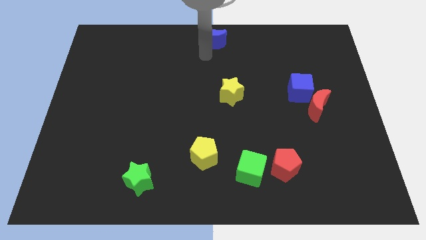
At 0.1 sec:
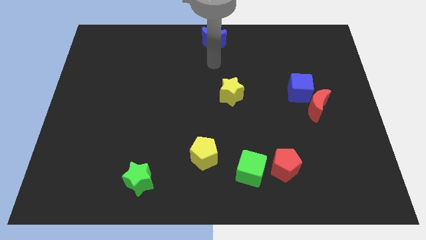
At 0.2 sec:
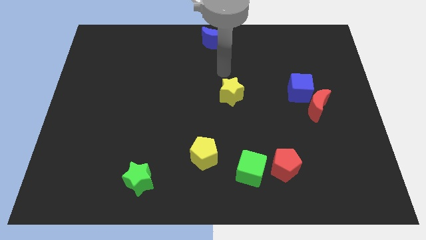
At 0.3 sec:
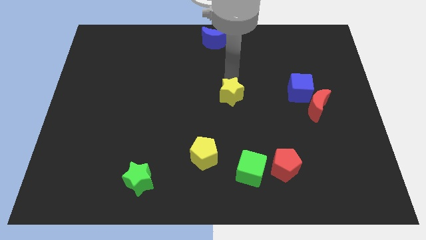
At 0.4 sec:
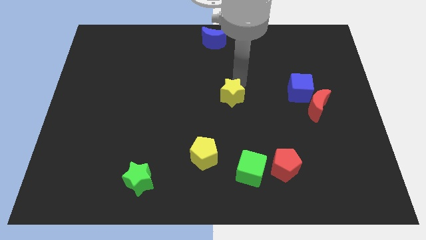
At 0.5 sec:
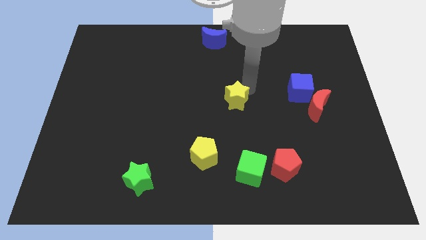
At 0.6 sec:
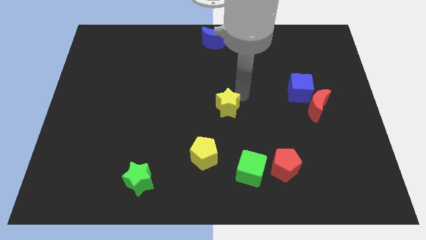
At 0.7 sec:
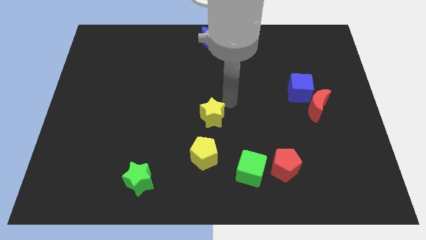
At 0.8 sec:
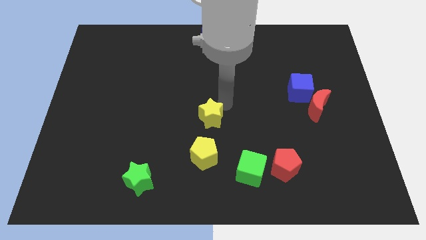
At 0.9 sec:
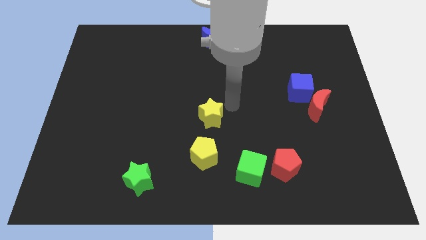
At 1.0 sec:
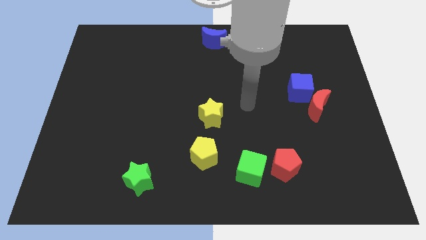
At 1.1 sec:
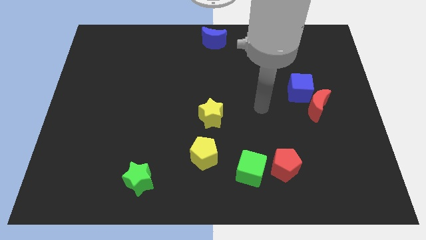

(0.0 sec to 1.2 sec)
place the yellow star above the yellow pentagon

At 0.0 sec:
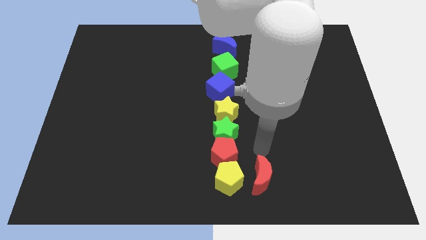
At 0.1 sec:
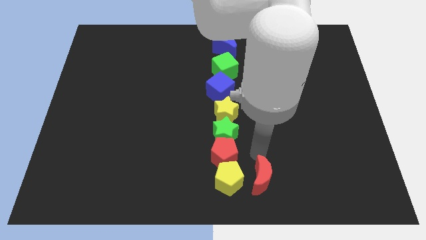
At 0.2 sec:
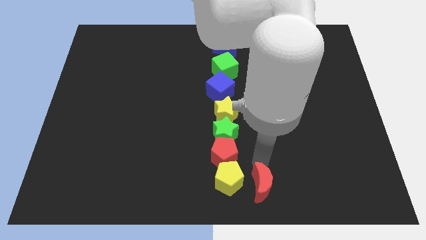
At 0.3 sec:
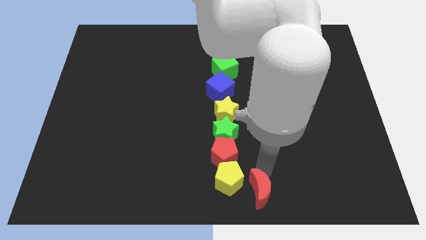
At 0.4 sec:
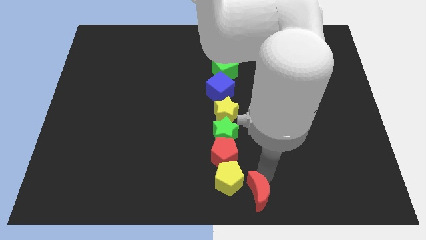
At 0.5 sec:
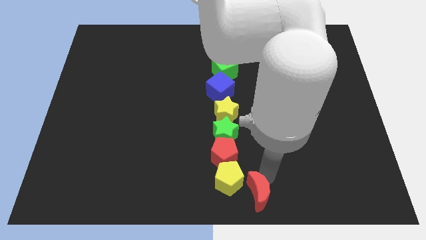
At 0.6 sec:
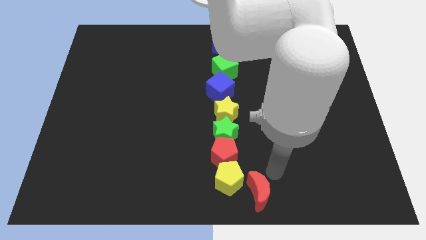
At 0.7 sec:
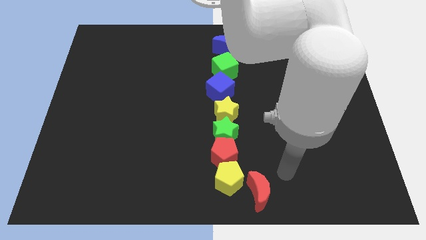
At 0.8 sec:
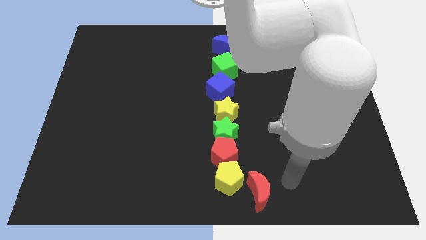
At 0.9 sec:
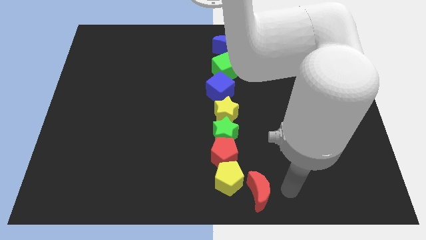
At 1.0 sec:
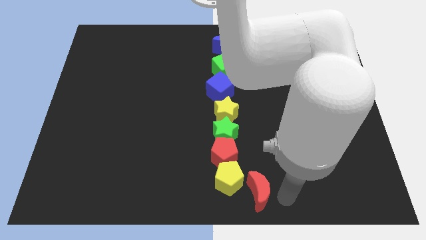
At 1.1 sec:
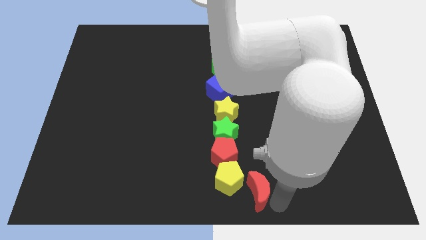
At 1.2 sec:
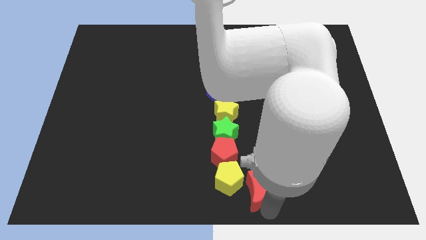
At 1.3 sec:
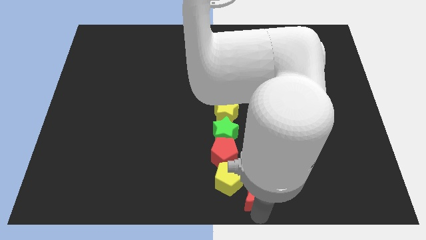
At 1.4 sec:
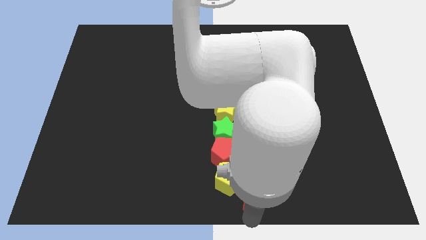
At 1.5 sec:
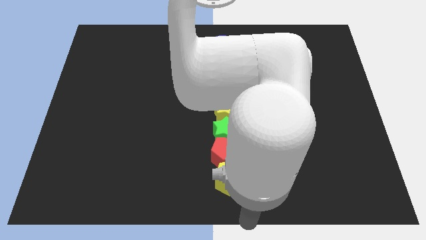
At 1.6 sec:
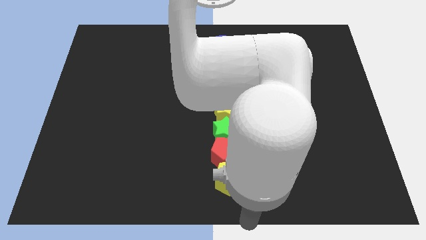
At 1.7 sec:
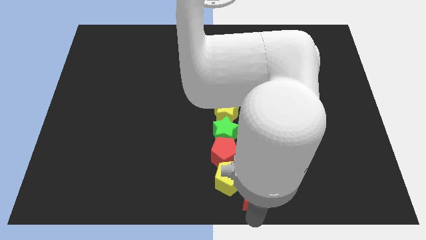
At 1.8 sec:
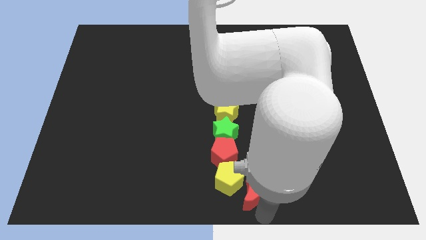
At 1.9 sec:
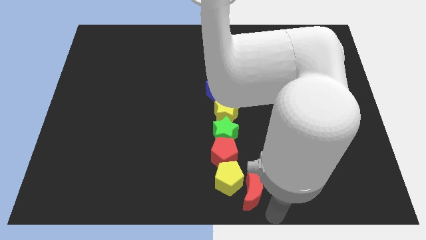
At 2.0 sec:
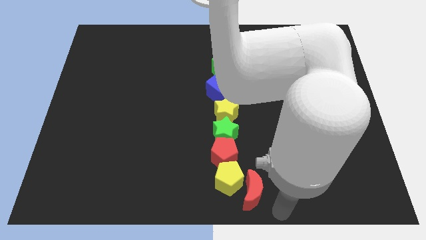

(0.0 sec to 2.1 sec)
slide the red moon near to the right side of the yellow pentagon

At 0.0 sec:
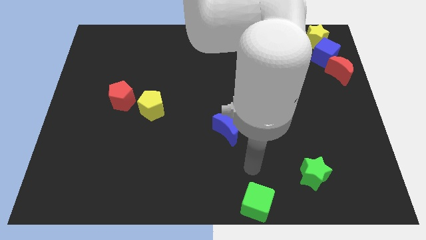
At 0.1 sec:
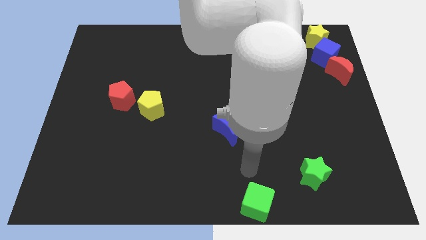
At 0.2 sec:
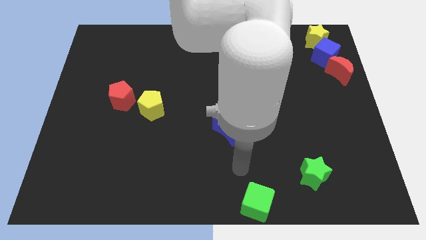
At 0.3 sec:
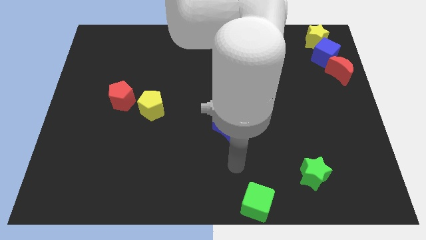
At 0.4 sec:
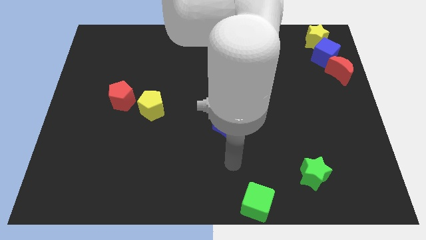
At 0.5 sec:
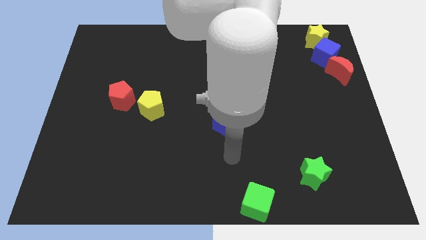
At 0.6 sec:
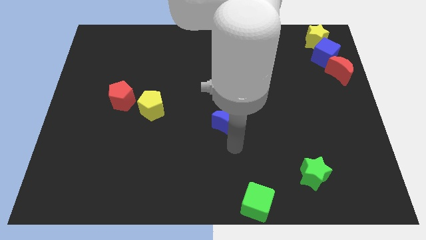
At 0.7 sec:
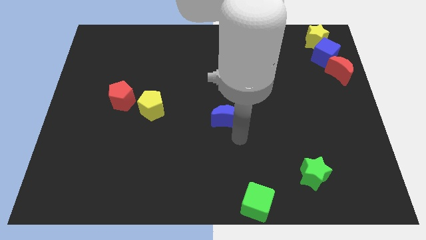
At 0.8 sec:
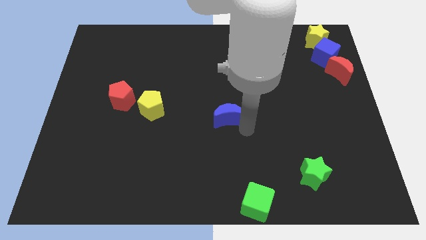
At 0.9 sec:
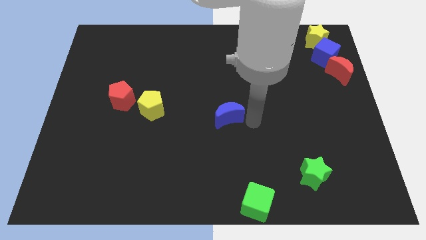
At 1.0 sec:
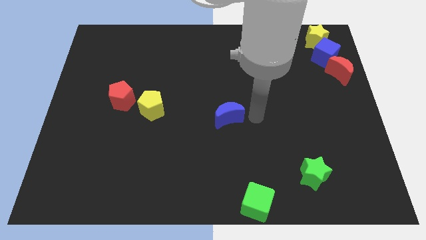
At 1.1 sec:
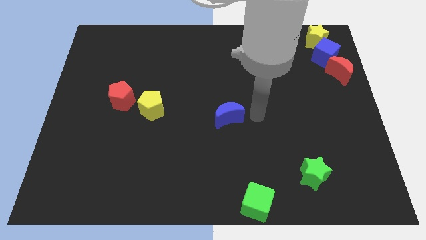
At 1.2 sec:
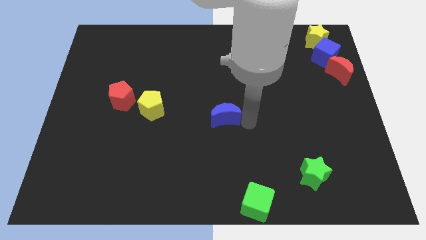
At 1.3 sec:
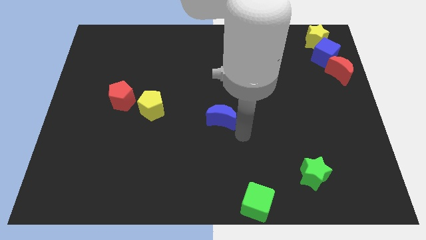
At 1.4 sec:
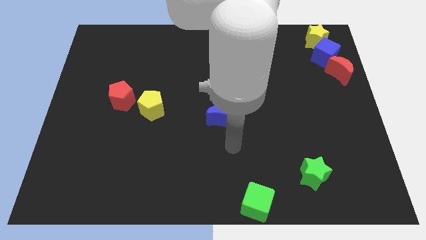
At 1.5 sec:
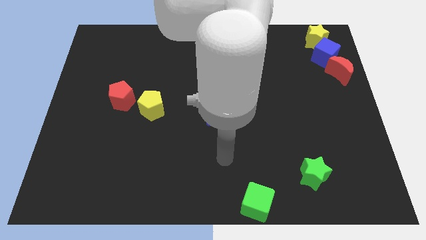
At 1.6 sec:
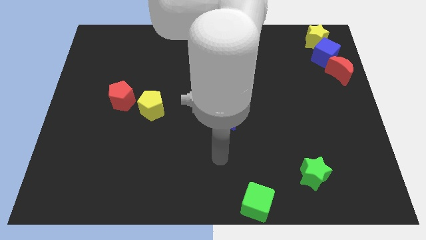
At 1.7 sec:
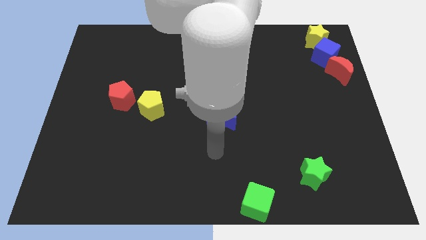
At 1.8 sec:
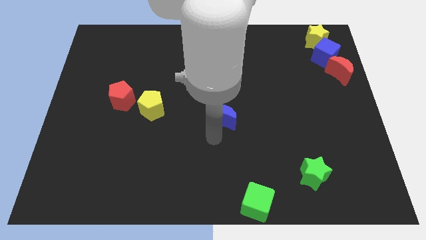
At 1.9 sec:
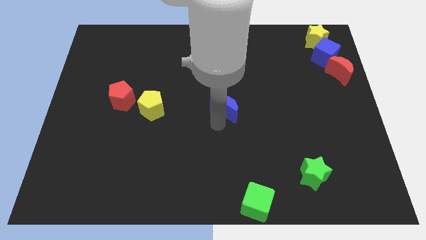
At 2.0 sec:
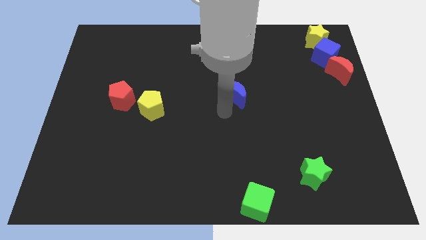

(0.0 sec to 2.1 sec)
place blue moon at the center

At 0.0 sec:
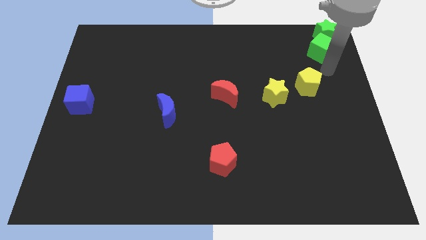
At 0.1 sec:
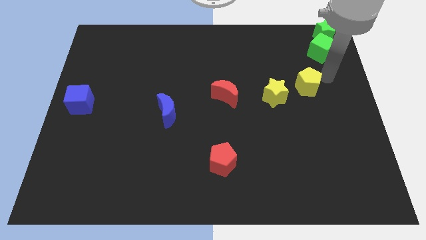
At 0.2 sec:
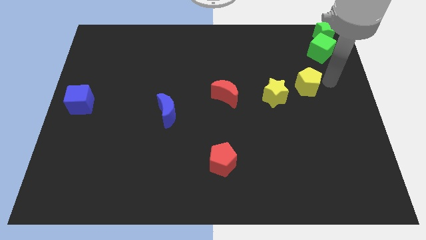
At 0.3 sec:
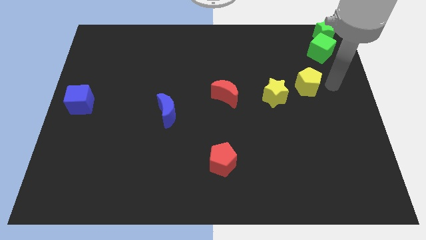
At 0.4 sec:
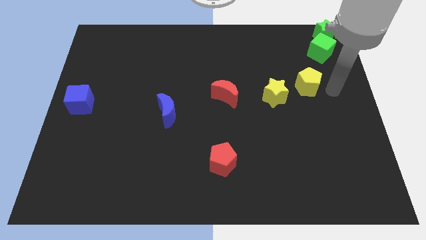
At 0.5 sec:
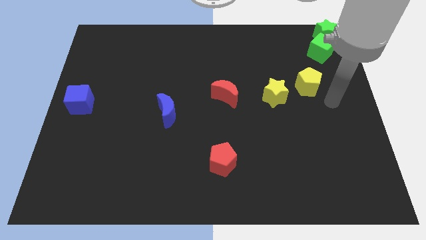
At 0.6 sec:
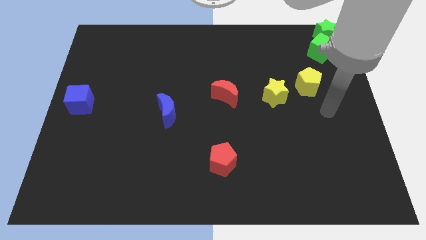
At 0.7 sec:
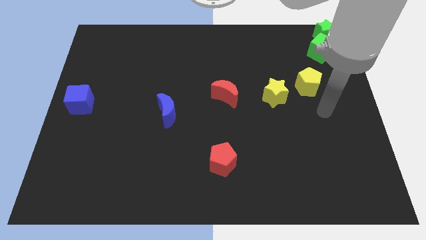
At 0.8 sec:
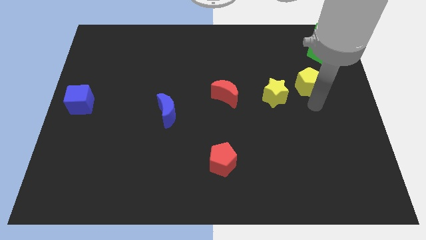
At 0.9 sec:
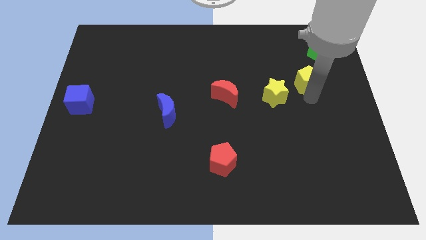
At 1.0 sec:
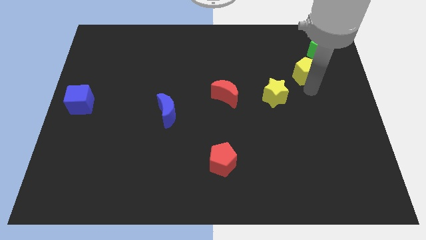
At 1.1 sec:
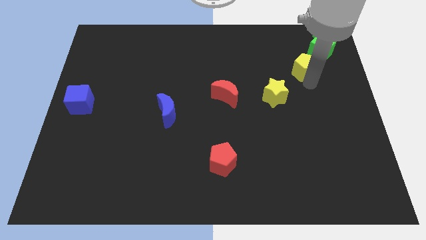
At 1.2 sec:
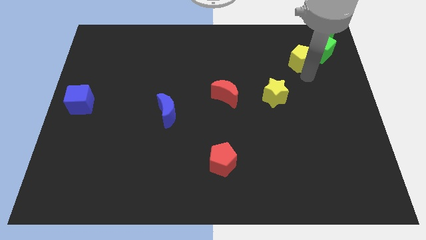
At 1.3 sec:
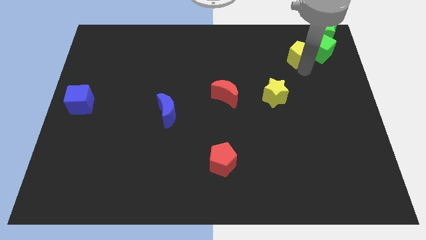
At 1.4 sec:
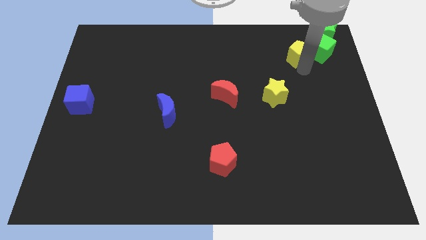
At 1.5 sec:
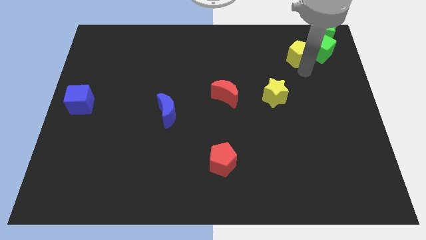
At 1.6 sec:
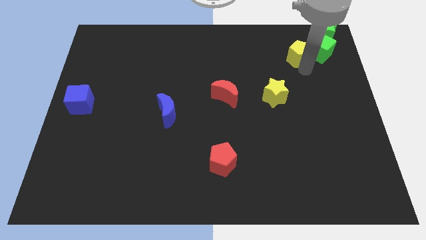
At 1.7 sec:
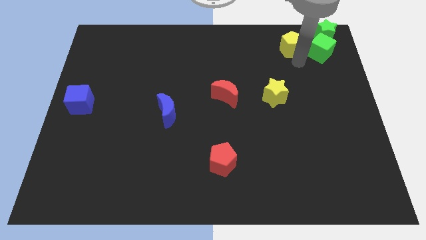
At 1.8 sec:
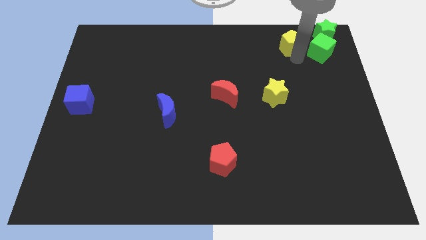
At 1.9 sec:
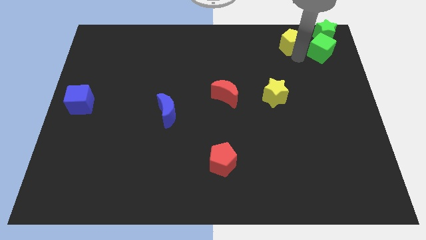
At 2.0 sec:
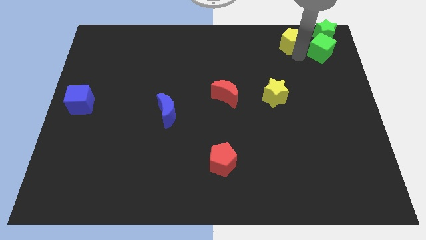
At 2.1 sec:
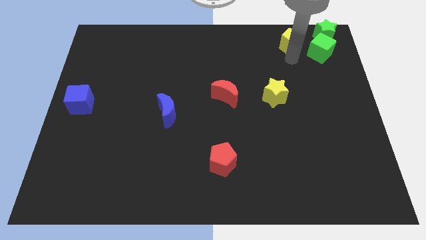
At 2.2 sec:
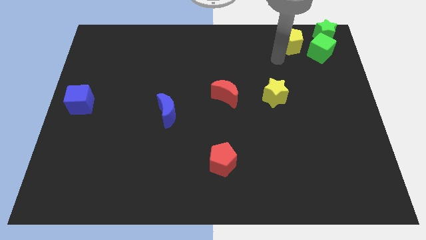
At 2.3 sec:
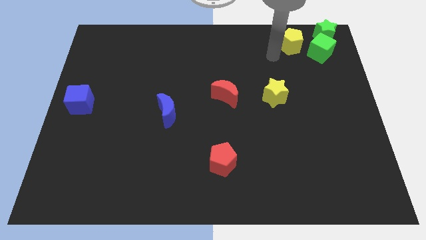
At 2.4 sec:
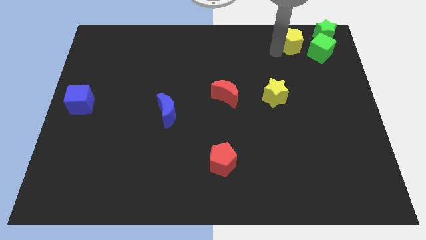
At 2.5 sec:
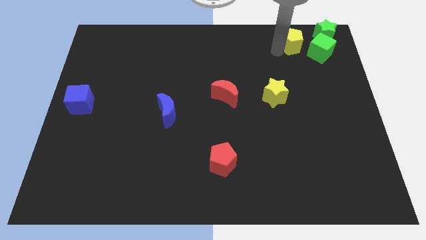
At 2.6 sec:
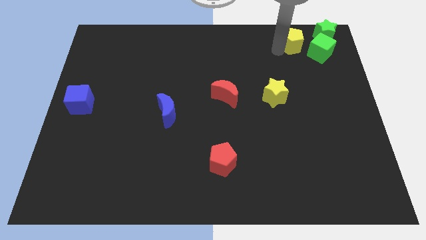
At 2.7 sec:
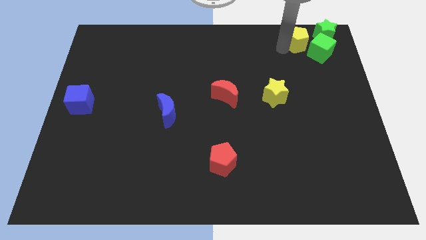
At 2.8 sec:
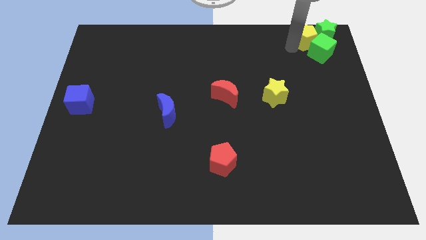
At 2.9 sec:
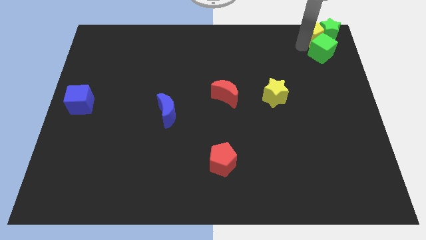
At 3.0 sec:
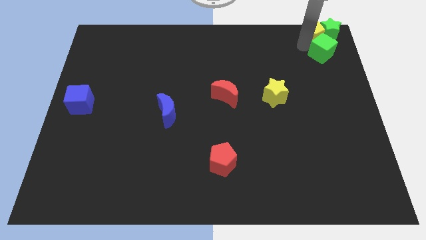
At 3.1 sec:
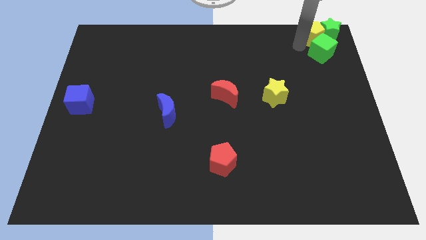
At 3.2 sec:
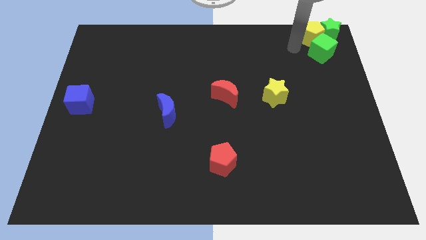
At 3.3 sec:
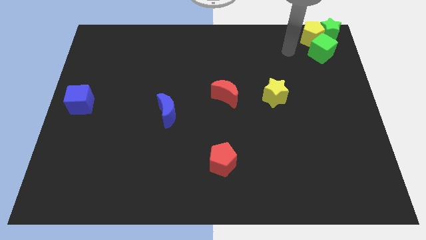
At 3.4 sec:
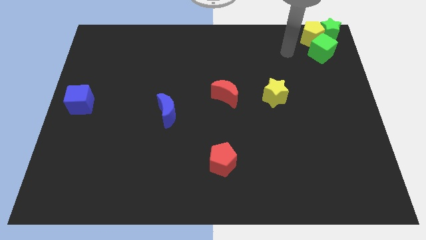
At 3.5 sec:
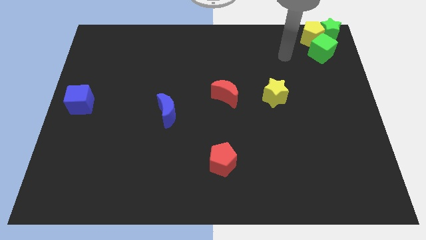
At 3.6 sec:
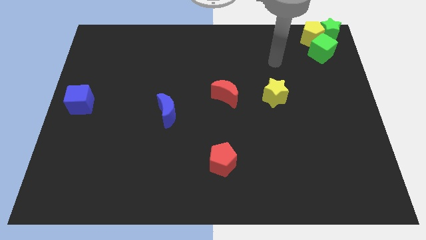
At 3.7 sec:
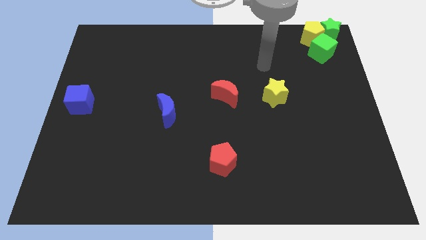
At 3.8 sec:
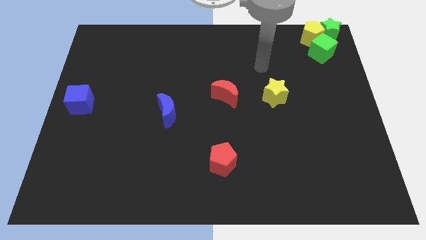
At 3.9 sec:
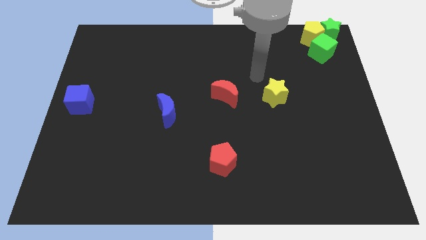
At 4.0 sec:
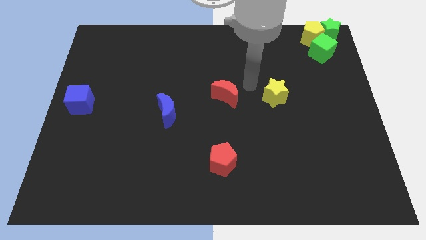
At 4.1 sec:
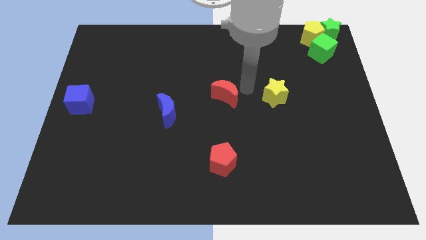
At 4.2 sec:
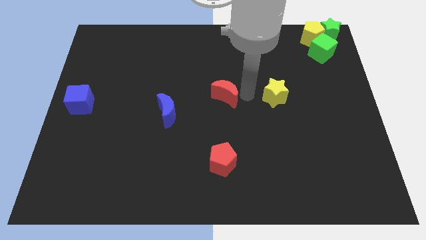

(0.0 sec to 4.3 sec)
place the yellow pentagon left to the green star
